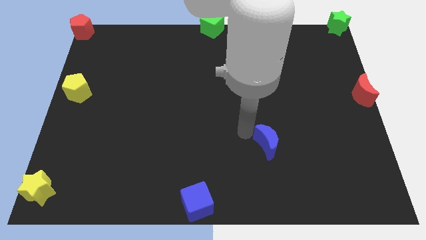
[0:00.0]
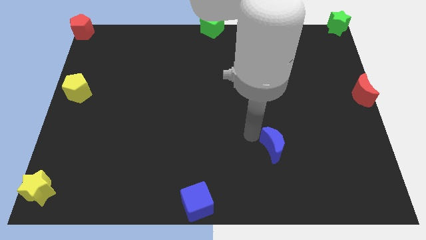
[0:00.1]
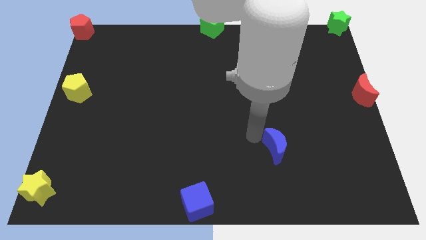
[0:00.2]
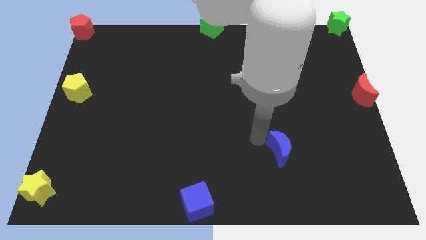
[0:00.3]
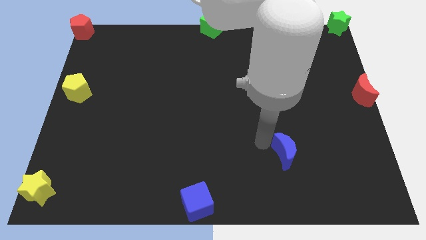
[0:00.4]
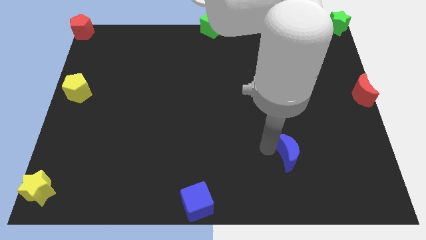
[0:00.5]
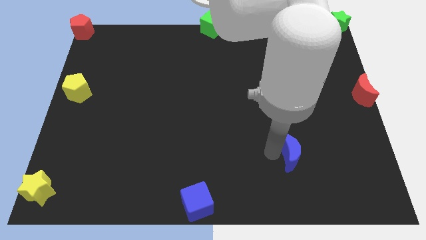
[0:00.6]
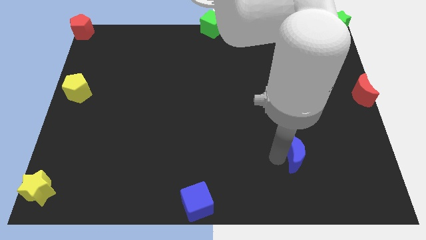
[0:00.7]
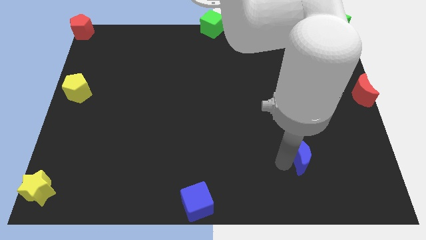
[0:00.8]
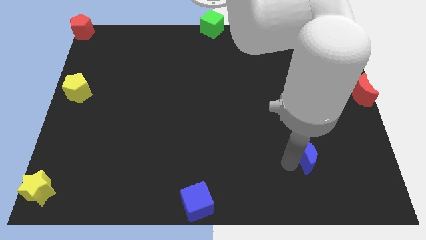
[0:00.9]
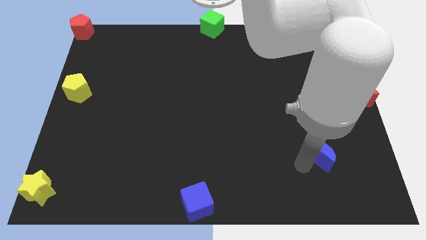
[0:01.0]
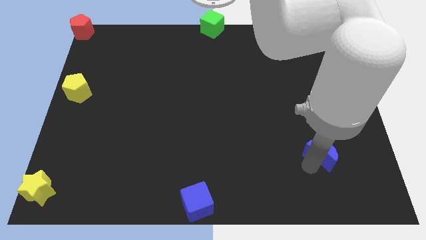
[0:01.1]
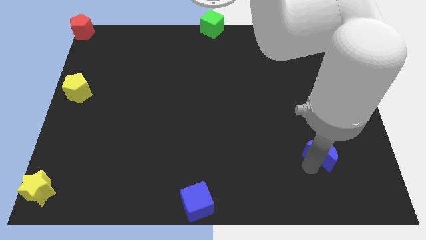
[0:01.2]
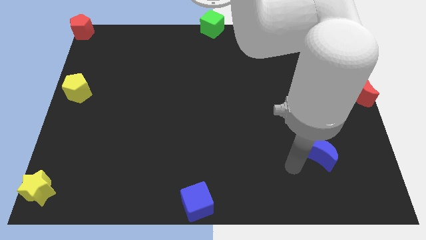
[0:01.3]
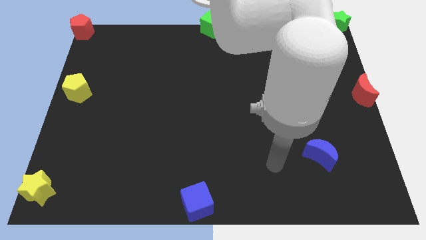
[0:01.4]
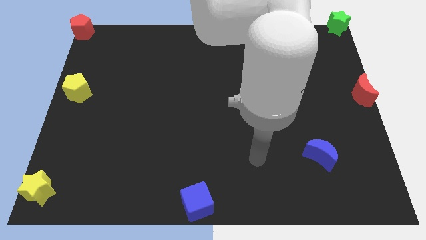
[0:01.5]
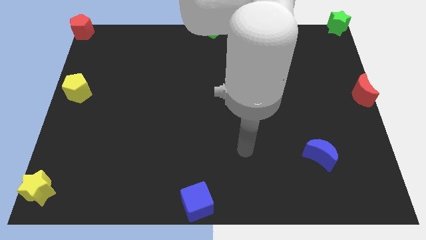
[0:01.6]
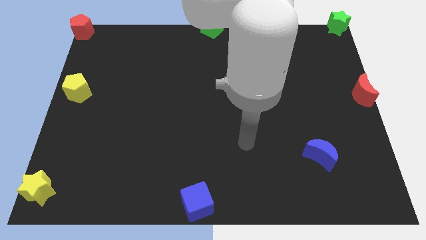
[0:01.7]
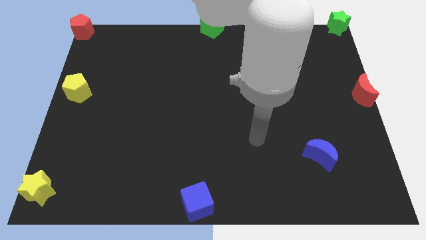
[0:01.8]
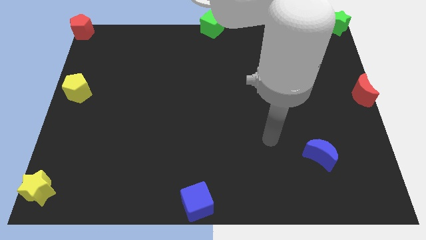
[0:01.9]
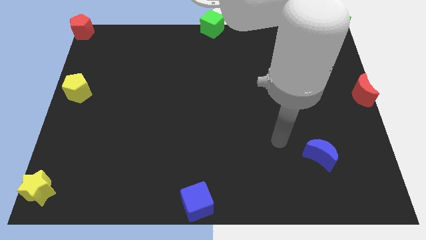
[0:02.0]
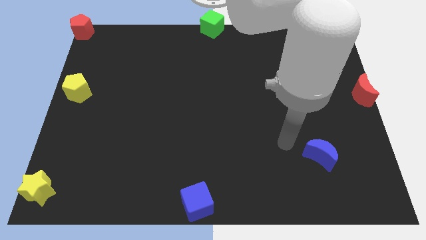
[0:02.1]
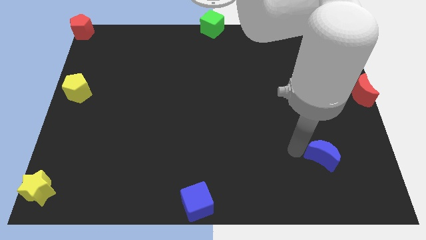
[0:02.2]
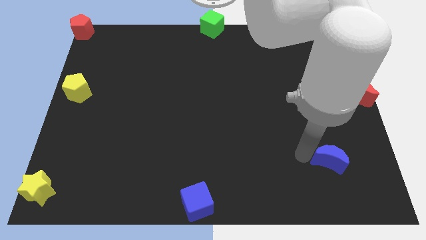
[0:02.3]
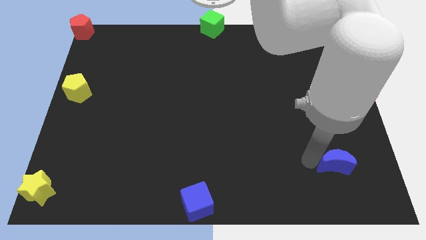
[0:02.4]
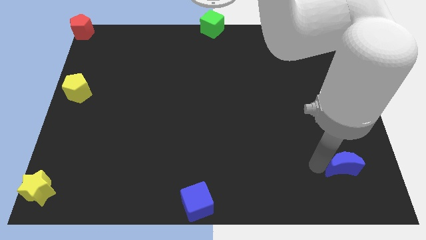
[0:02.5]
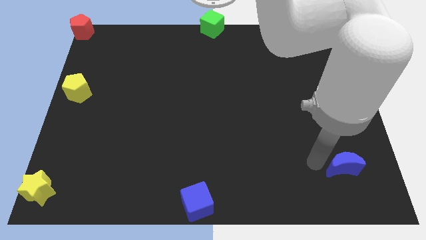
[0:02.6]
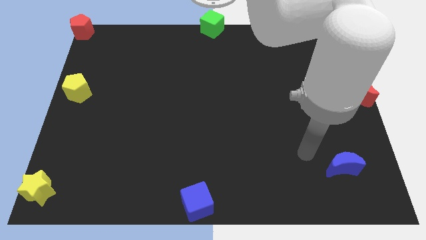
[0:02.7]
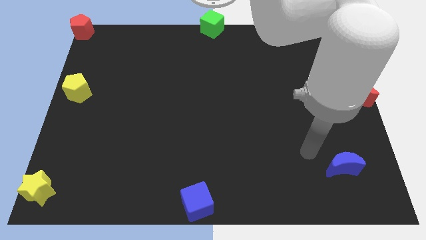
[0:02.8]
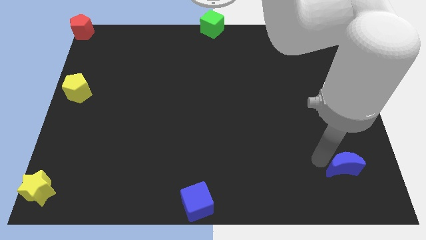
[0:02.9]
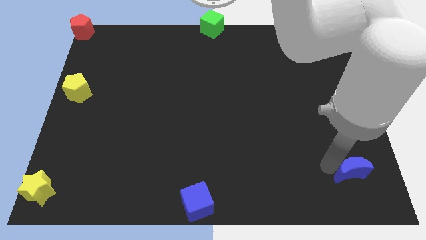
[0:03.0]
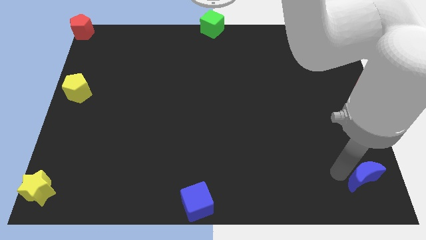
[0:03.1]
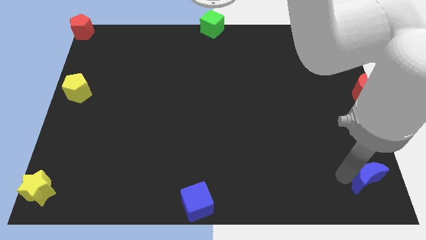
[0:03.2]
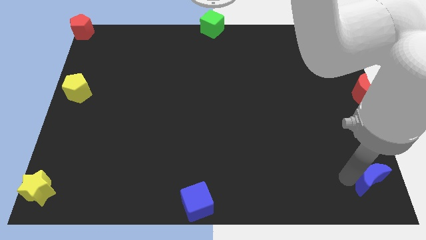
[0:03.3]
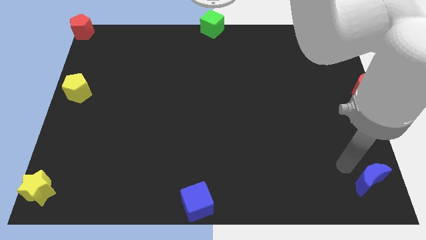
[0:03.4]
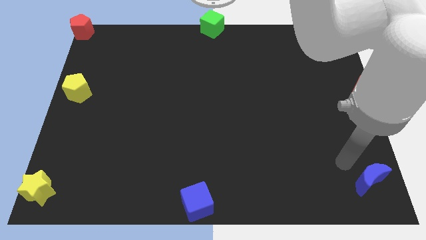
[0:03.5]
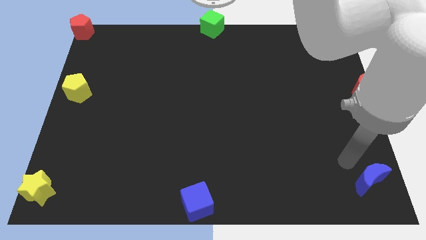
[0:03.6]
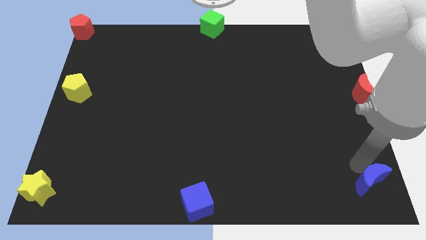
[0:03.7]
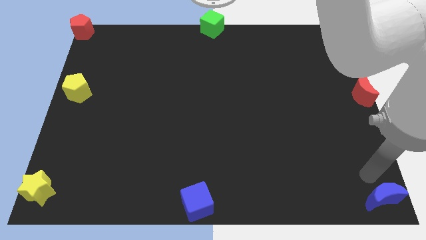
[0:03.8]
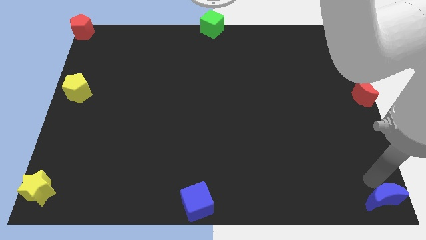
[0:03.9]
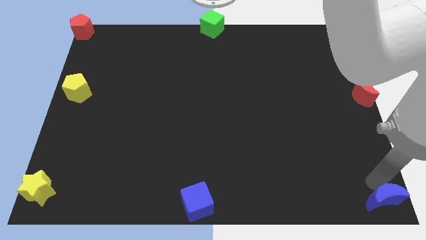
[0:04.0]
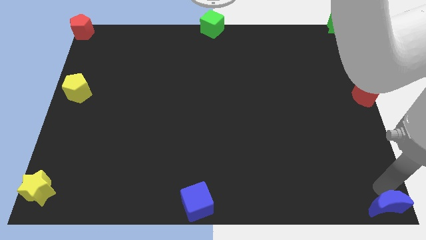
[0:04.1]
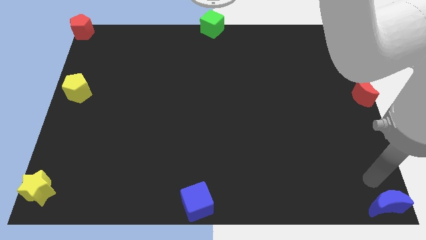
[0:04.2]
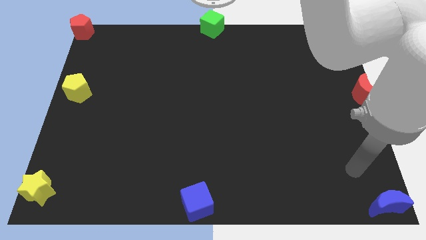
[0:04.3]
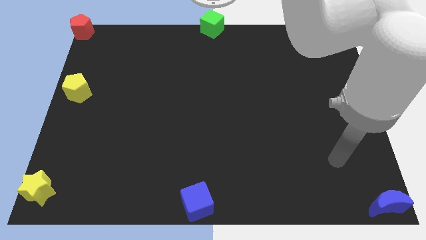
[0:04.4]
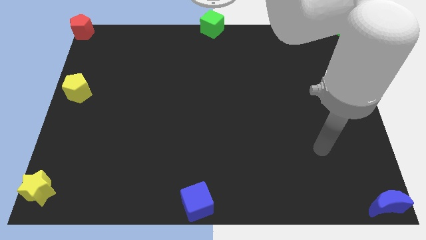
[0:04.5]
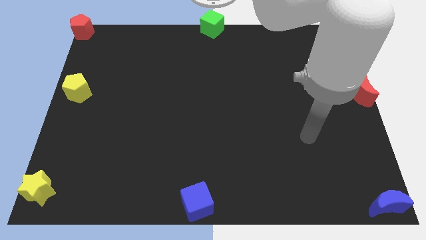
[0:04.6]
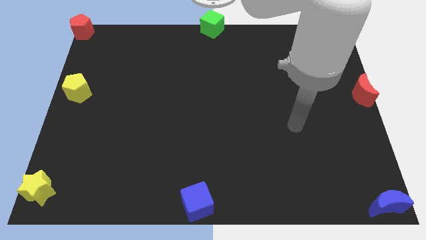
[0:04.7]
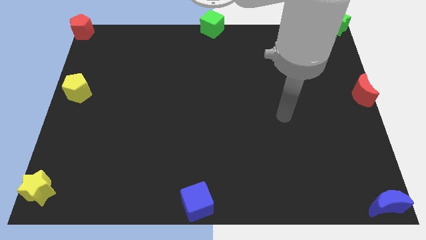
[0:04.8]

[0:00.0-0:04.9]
push the blue moon to the bottom right of the board

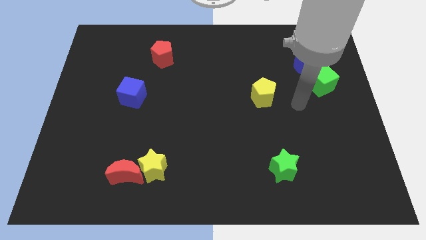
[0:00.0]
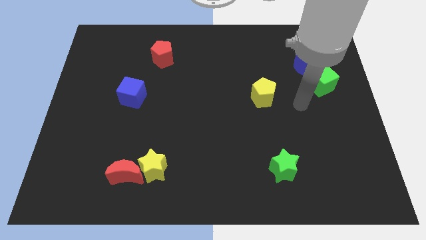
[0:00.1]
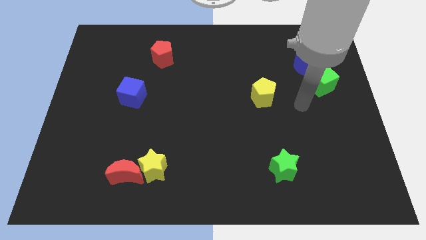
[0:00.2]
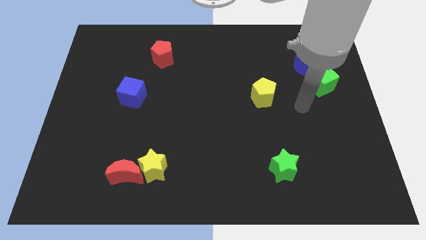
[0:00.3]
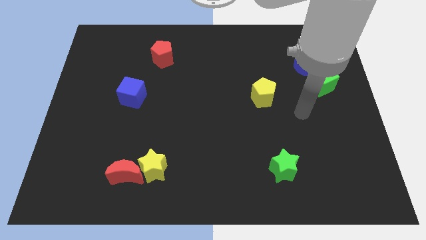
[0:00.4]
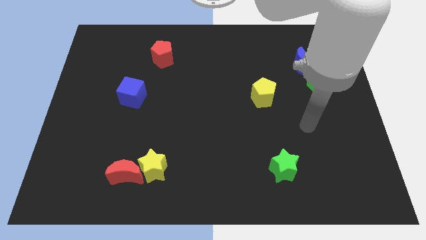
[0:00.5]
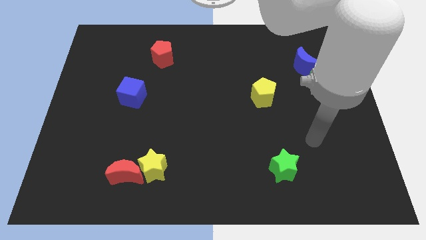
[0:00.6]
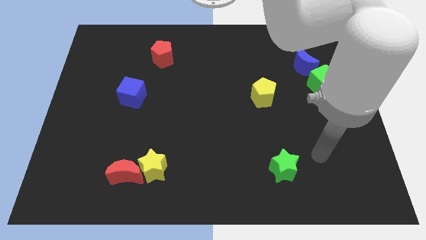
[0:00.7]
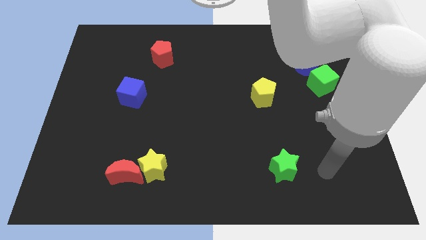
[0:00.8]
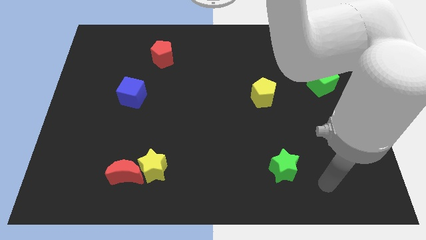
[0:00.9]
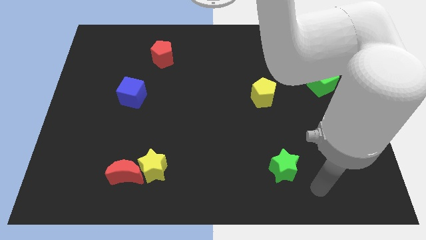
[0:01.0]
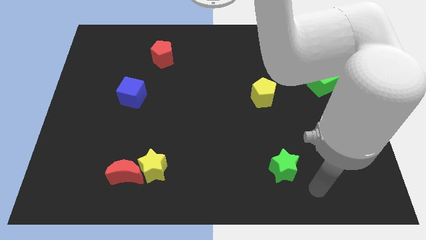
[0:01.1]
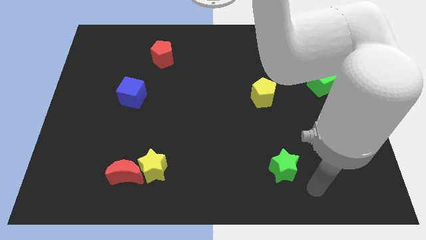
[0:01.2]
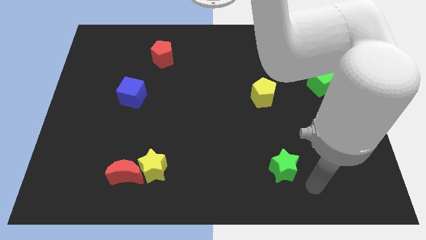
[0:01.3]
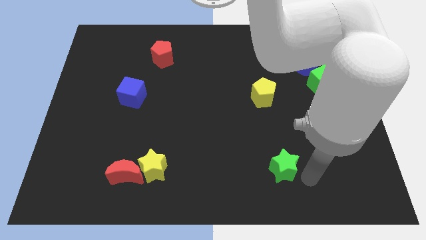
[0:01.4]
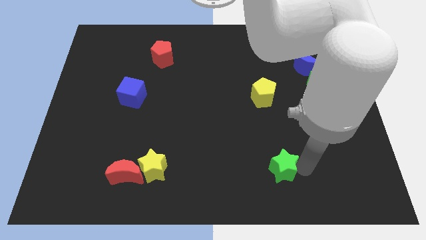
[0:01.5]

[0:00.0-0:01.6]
move your arm close to the green star

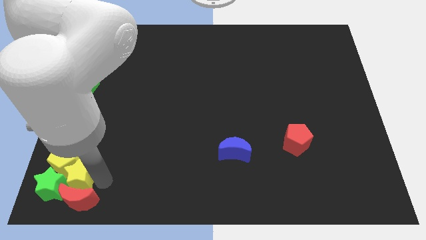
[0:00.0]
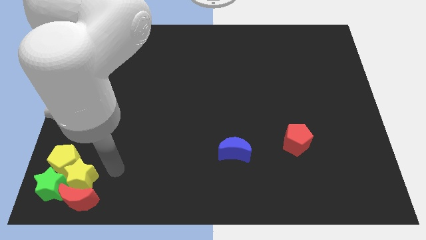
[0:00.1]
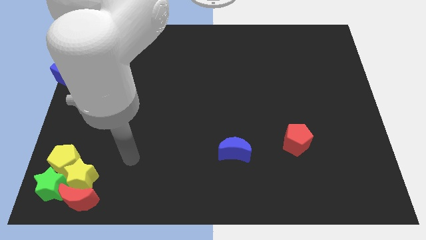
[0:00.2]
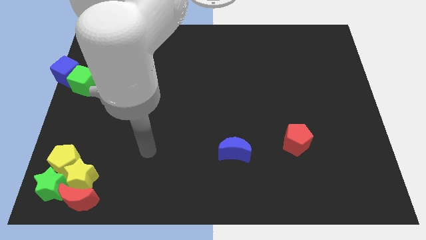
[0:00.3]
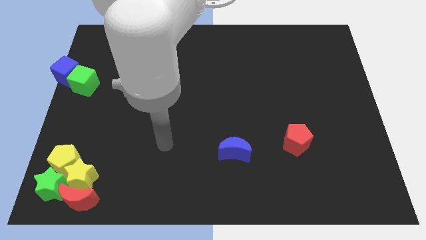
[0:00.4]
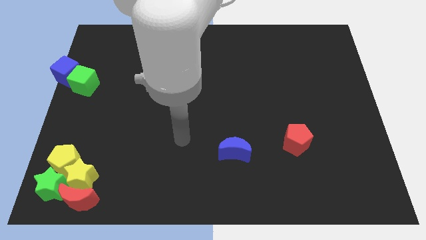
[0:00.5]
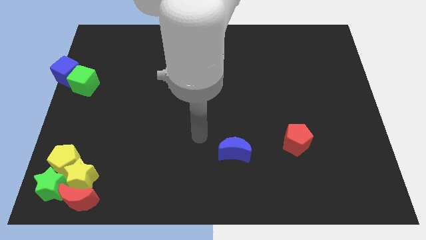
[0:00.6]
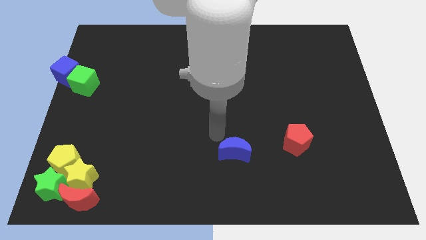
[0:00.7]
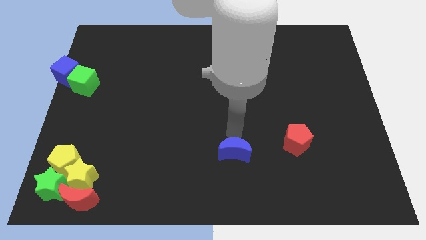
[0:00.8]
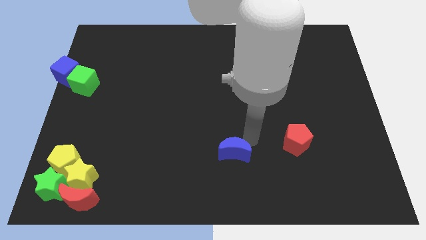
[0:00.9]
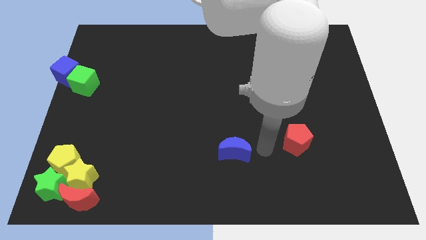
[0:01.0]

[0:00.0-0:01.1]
drag the arm away from the yellow star

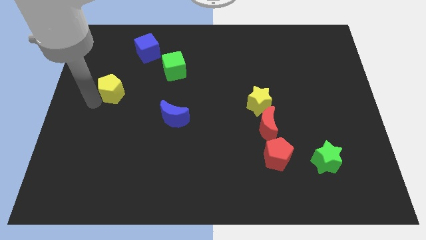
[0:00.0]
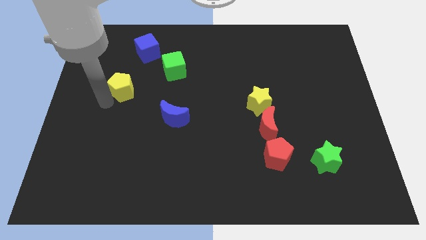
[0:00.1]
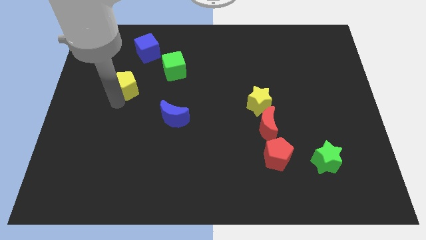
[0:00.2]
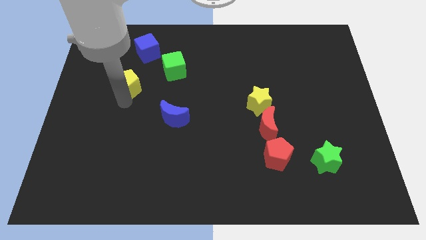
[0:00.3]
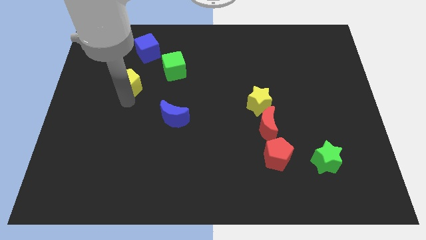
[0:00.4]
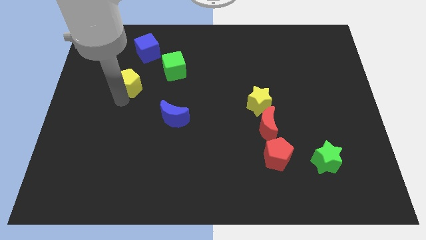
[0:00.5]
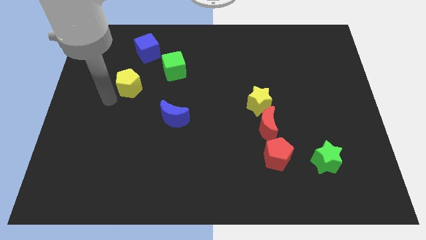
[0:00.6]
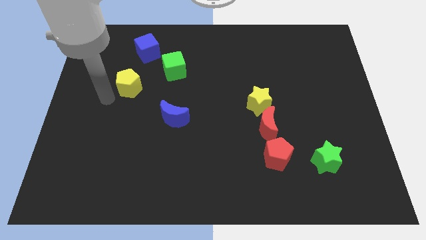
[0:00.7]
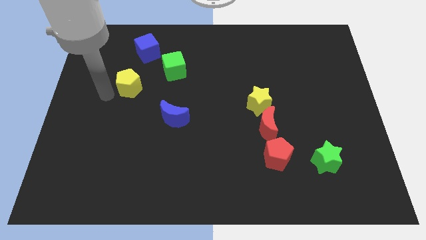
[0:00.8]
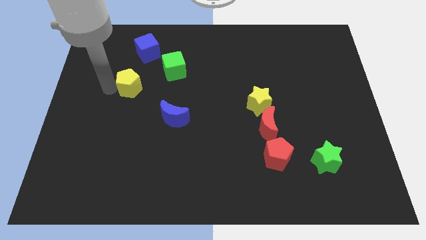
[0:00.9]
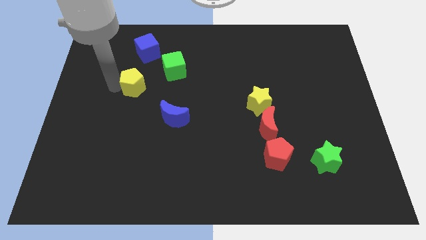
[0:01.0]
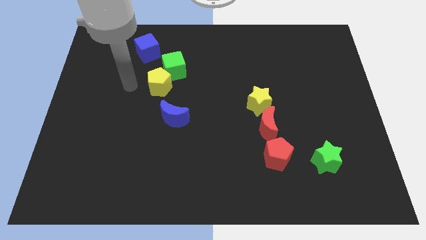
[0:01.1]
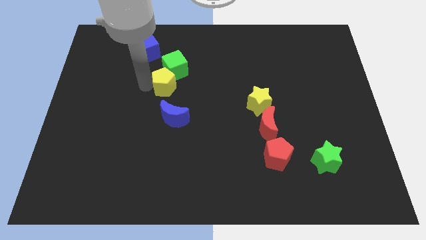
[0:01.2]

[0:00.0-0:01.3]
push the yellow pentagon into green cube

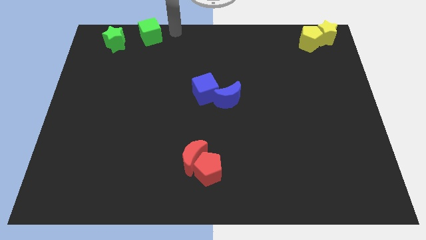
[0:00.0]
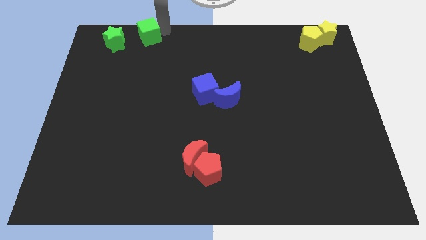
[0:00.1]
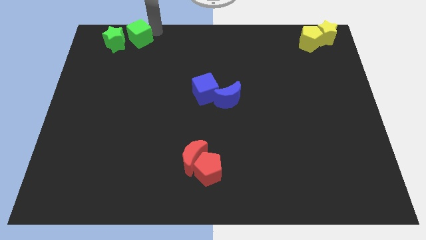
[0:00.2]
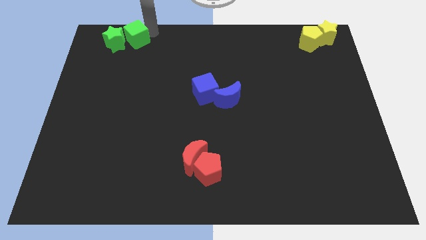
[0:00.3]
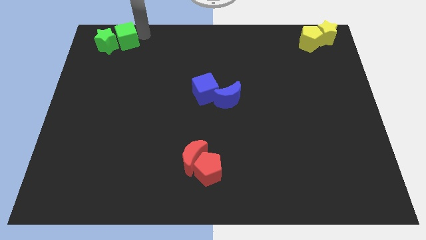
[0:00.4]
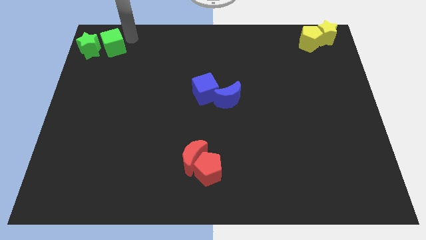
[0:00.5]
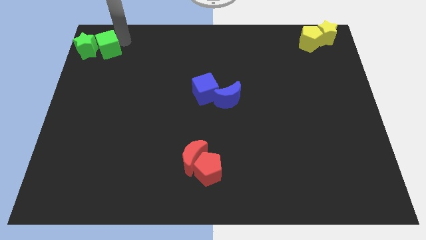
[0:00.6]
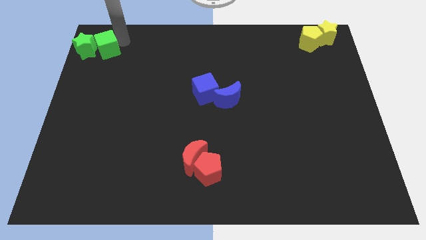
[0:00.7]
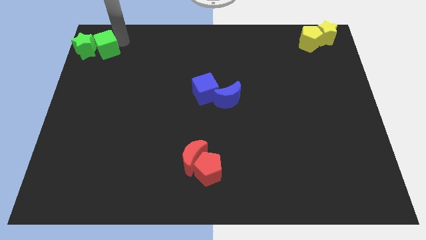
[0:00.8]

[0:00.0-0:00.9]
push the green cube into the green star
